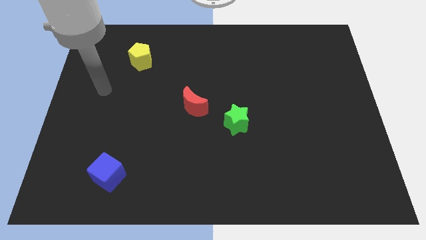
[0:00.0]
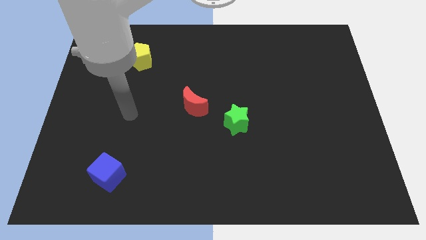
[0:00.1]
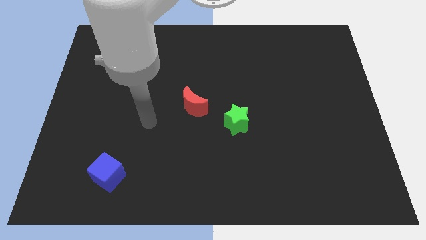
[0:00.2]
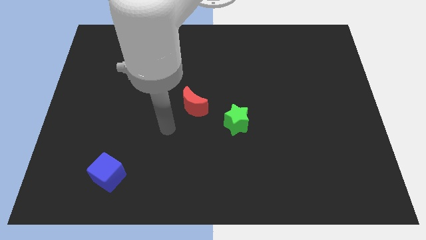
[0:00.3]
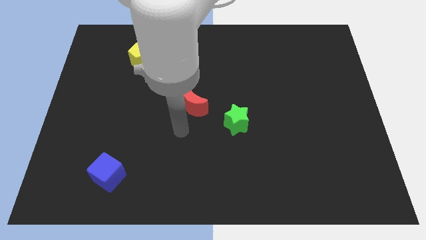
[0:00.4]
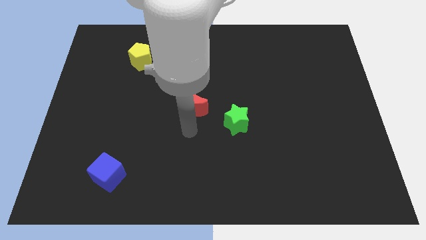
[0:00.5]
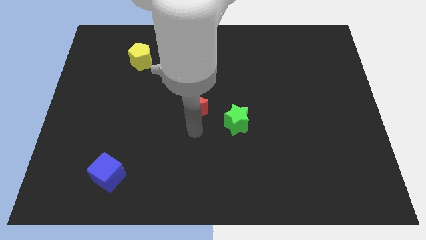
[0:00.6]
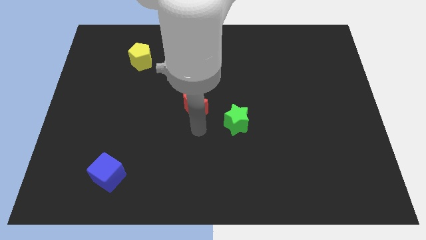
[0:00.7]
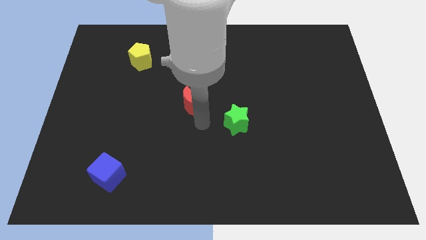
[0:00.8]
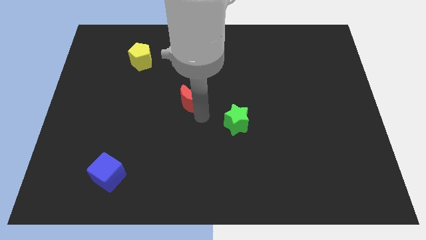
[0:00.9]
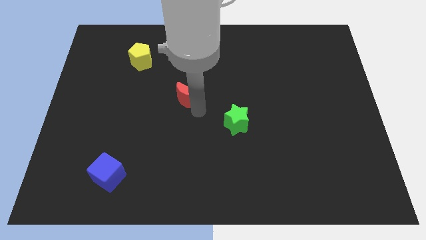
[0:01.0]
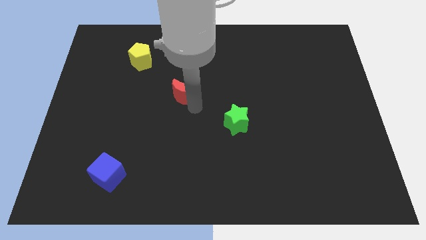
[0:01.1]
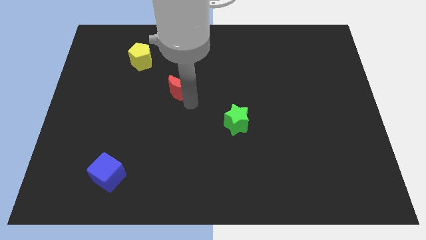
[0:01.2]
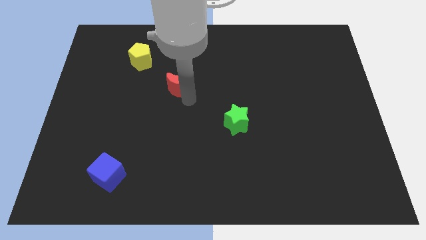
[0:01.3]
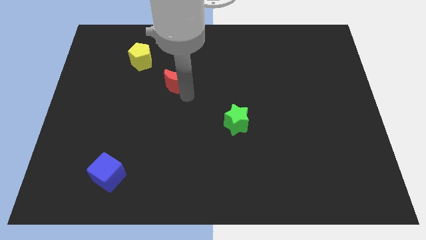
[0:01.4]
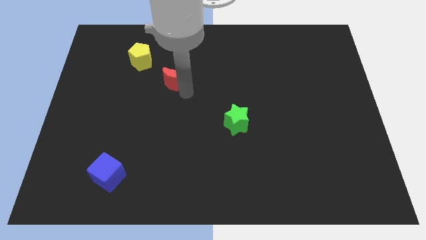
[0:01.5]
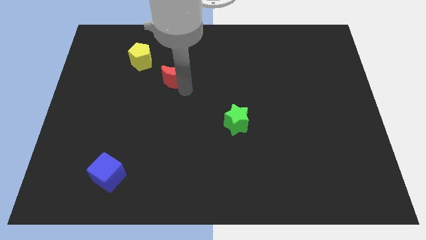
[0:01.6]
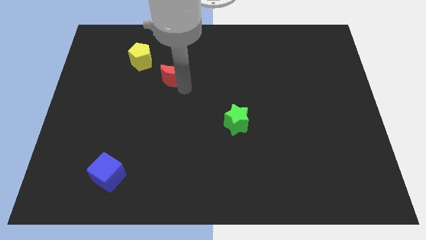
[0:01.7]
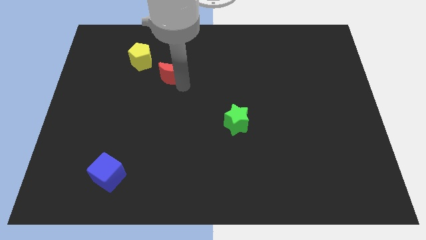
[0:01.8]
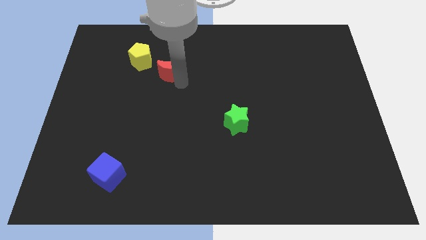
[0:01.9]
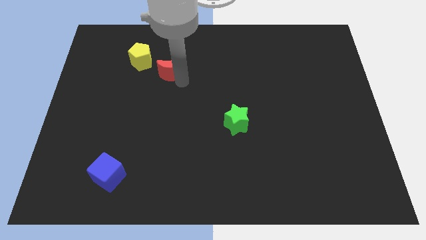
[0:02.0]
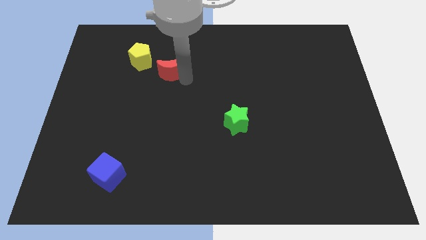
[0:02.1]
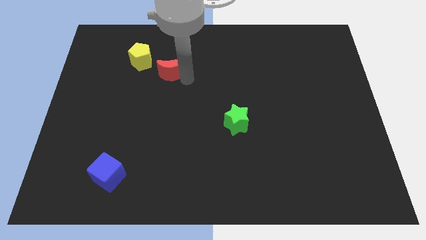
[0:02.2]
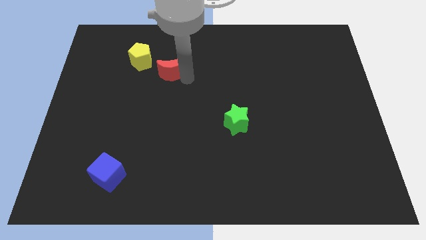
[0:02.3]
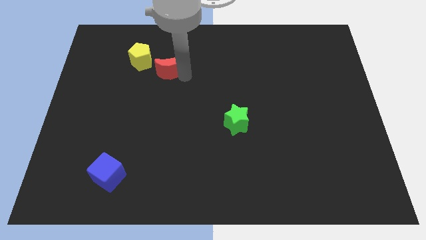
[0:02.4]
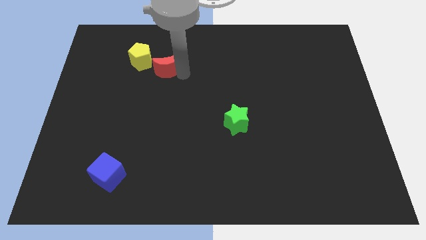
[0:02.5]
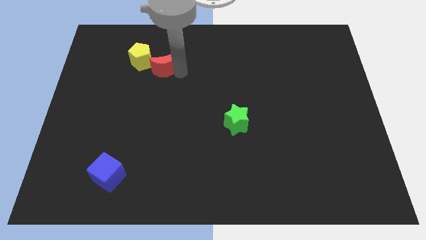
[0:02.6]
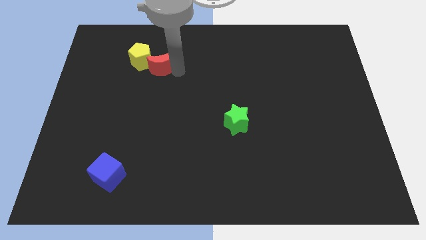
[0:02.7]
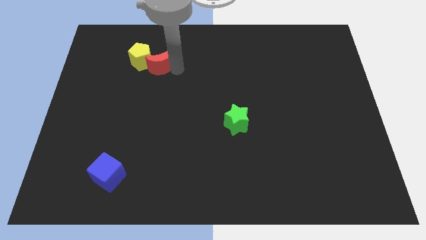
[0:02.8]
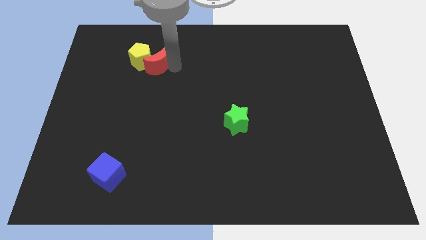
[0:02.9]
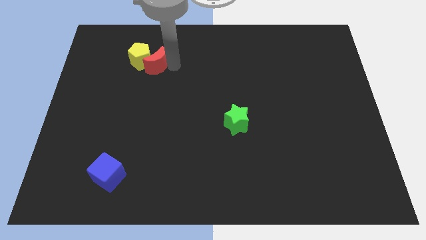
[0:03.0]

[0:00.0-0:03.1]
push the red moon close to the yellow pentagon

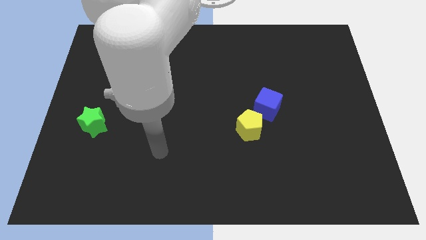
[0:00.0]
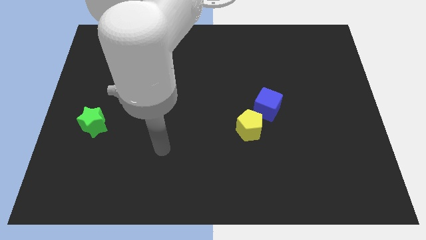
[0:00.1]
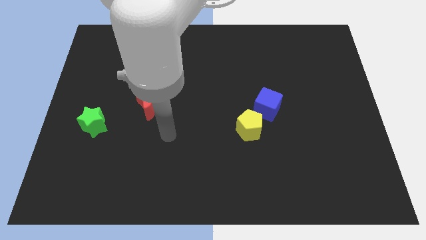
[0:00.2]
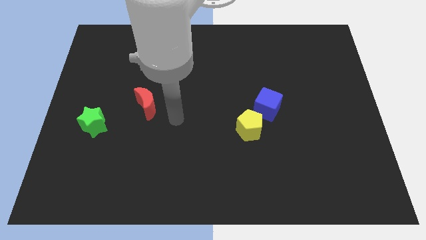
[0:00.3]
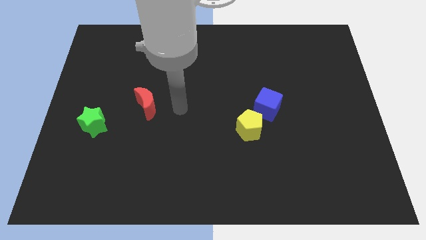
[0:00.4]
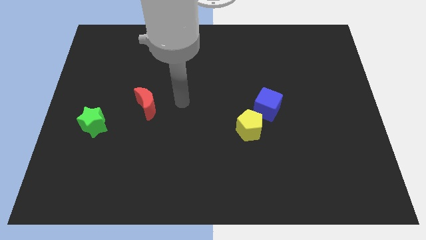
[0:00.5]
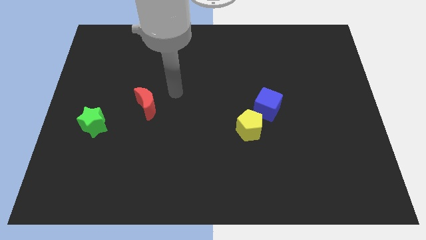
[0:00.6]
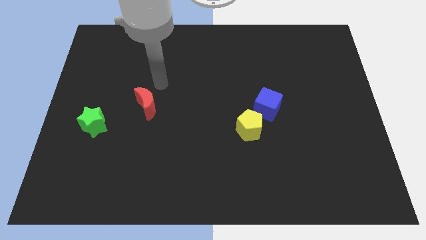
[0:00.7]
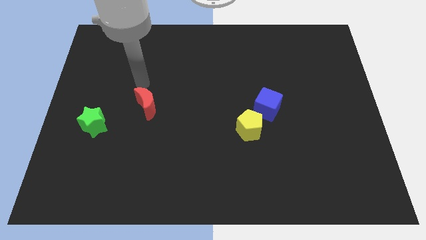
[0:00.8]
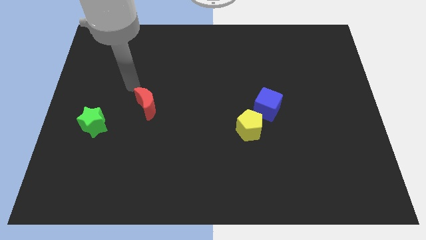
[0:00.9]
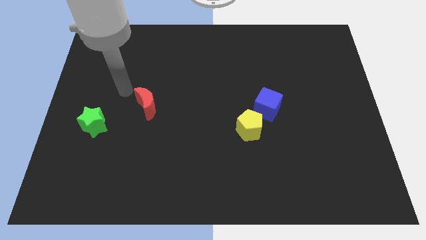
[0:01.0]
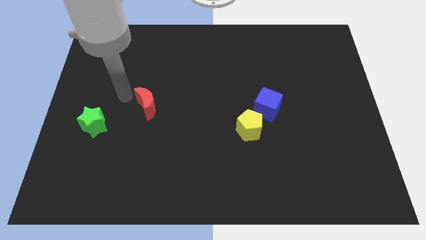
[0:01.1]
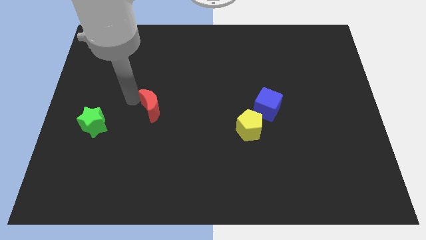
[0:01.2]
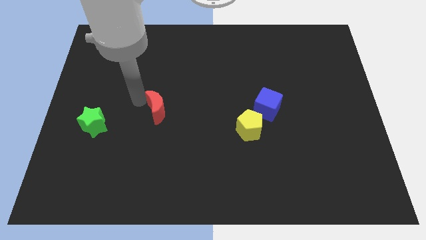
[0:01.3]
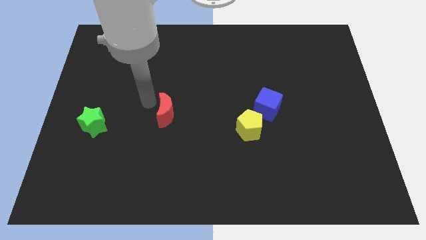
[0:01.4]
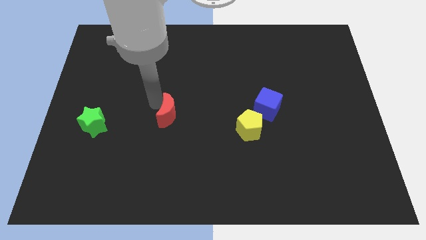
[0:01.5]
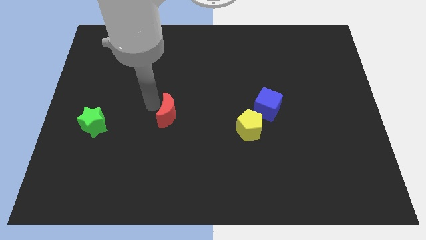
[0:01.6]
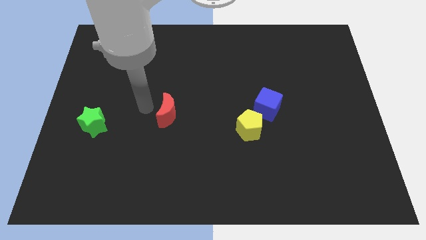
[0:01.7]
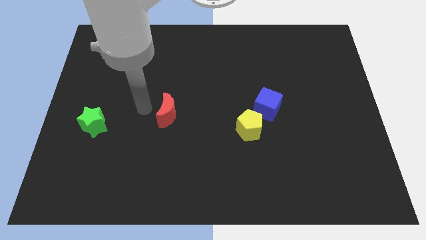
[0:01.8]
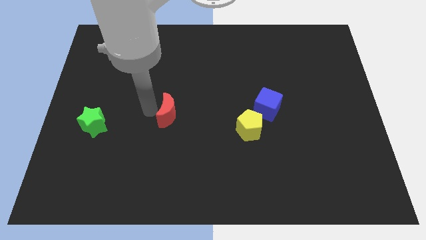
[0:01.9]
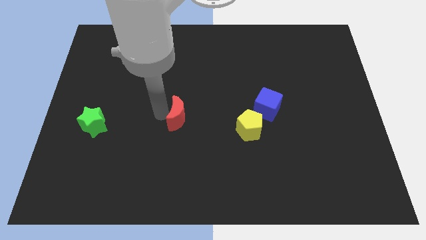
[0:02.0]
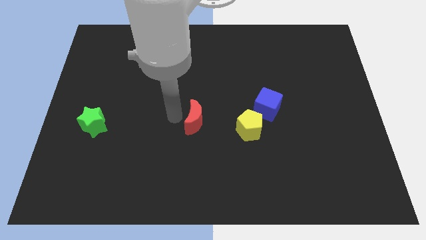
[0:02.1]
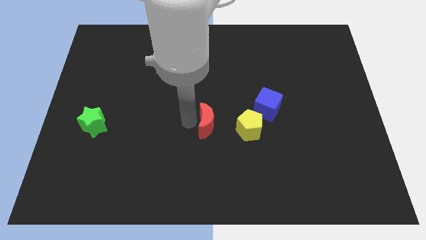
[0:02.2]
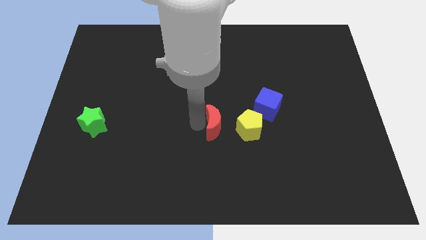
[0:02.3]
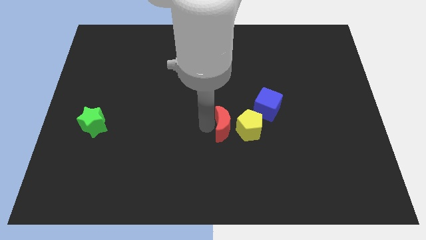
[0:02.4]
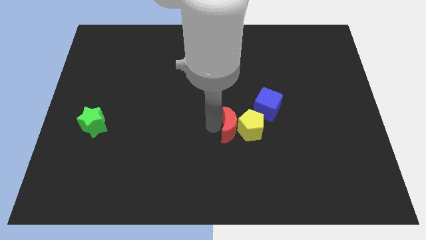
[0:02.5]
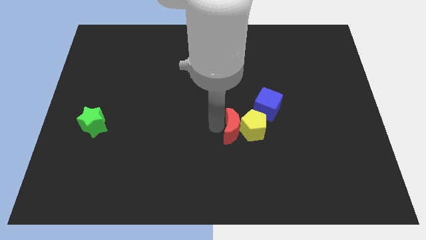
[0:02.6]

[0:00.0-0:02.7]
put the moon close to the yellow pentagon

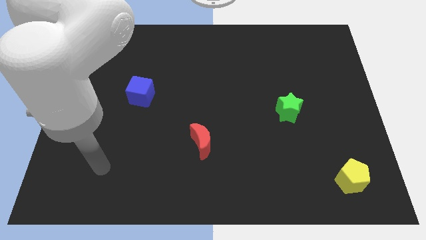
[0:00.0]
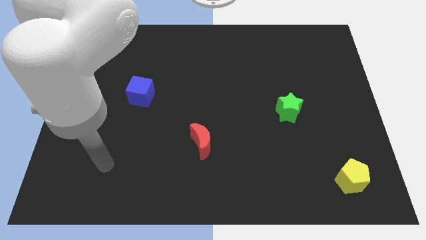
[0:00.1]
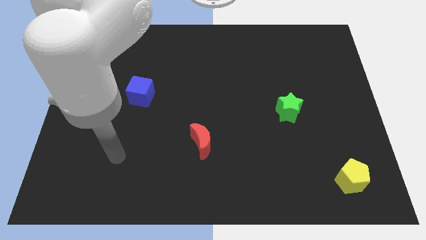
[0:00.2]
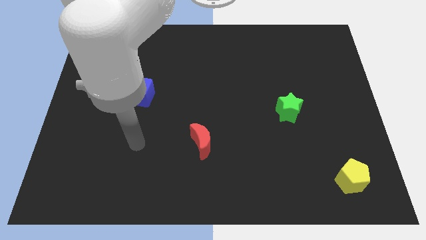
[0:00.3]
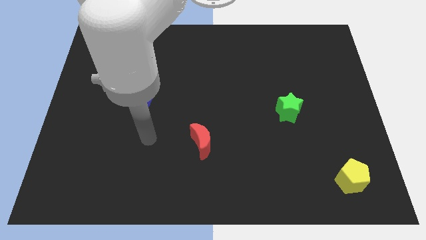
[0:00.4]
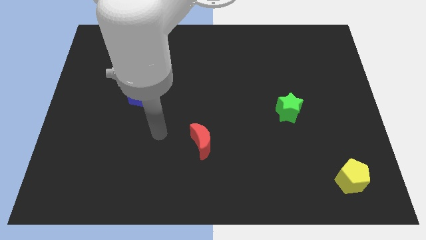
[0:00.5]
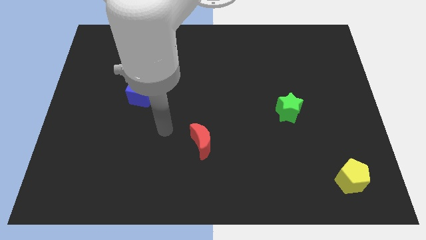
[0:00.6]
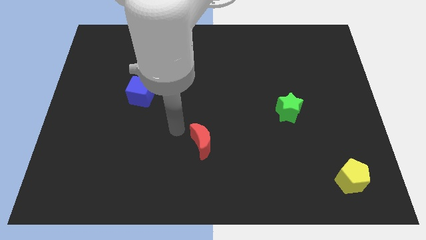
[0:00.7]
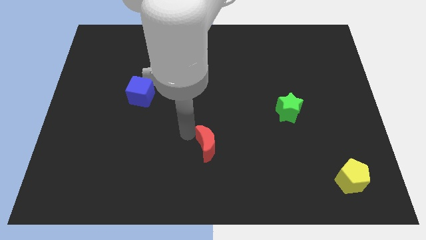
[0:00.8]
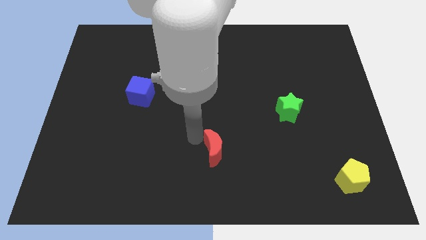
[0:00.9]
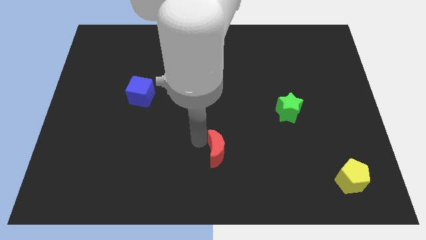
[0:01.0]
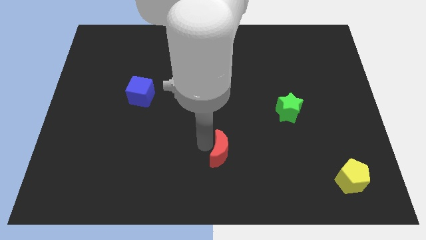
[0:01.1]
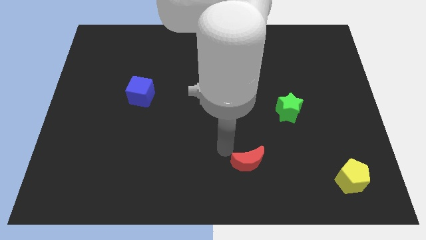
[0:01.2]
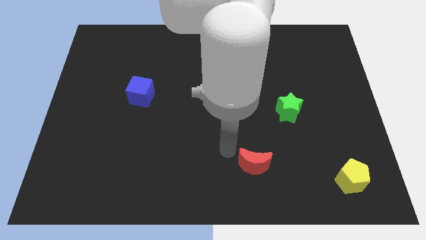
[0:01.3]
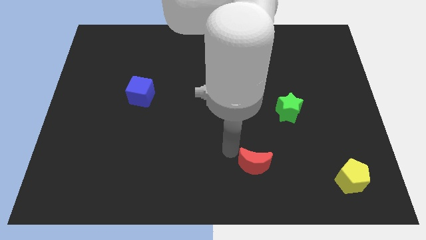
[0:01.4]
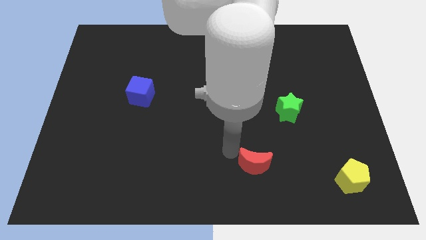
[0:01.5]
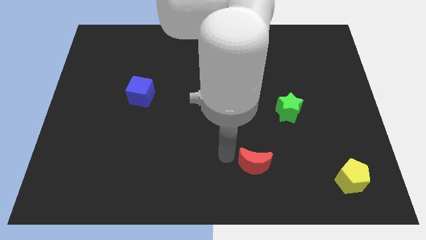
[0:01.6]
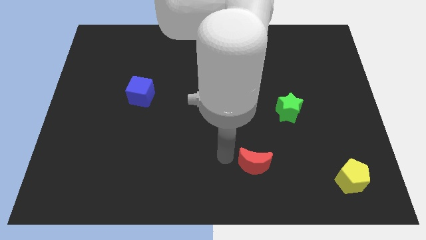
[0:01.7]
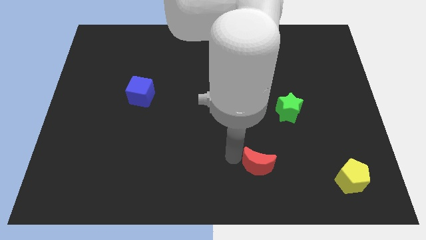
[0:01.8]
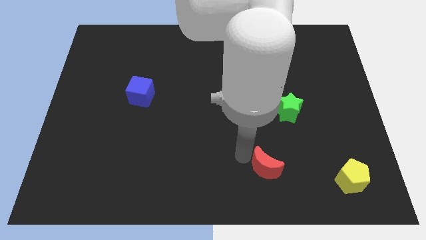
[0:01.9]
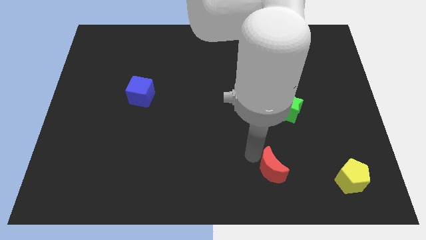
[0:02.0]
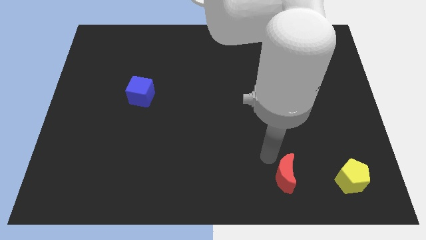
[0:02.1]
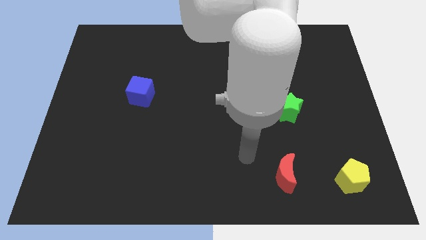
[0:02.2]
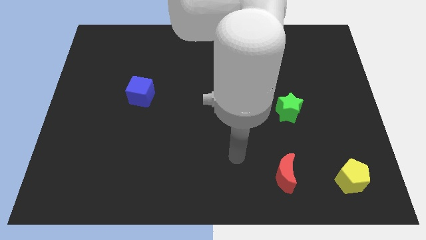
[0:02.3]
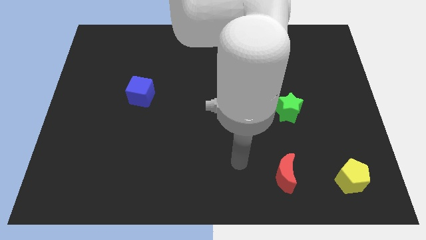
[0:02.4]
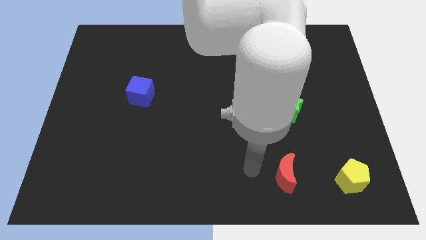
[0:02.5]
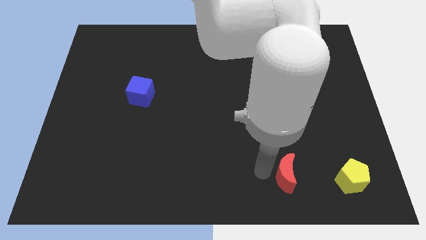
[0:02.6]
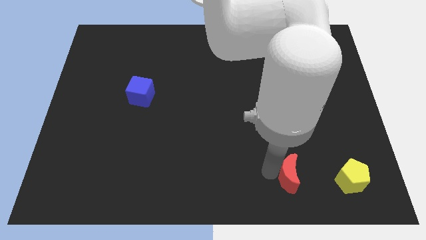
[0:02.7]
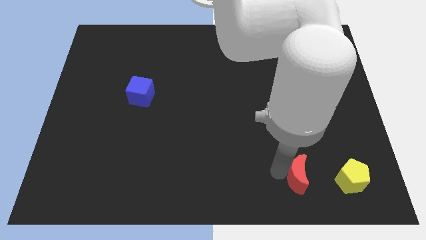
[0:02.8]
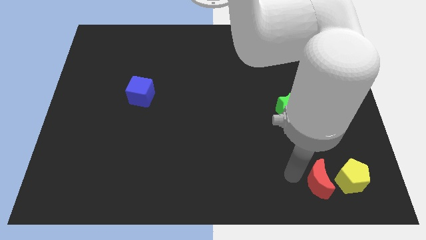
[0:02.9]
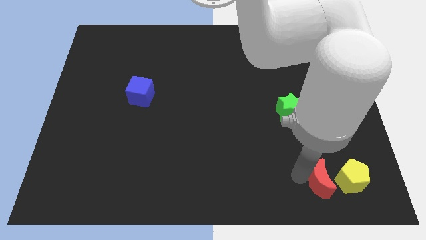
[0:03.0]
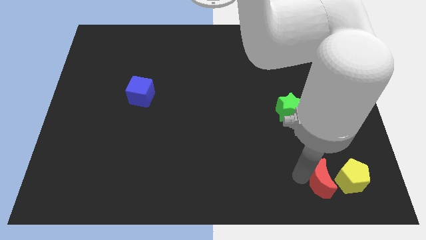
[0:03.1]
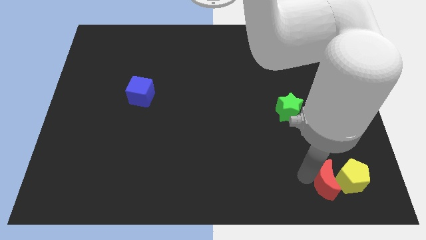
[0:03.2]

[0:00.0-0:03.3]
slide the red moon close to the yellow pentagon
